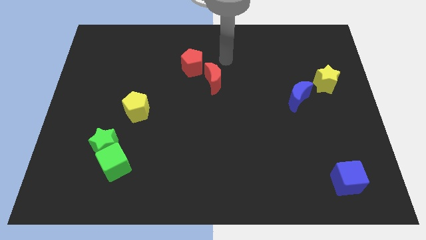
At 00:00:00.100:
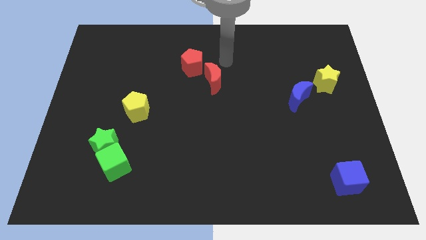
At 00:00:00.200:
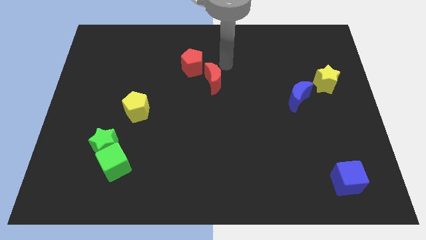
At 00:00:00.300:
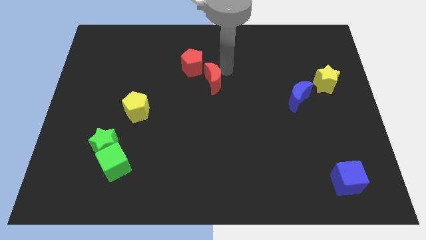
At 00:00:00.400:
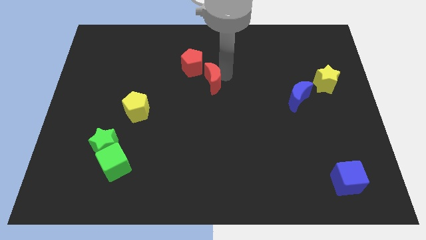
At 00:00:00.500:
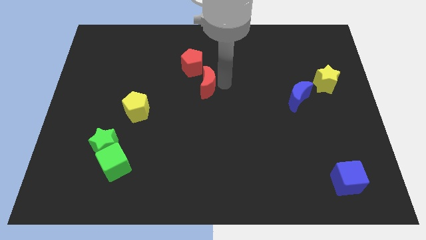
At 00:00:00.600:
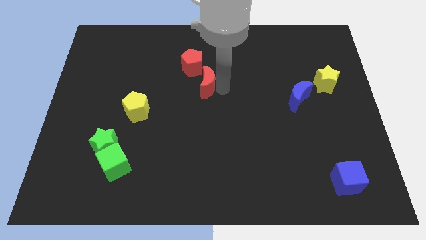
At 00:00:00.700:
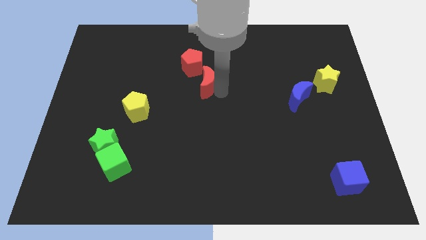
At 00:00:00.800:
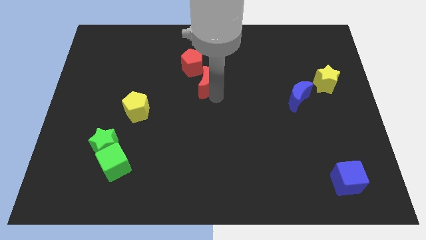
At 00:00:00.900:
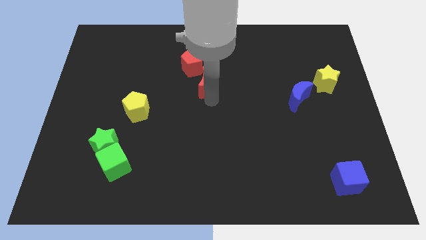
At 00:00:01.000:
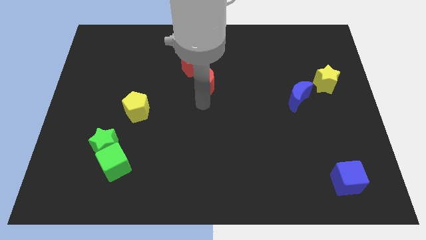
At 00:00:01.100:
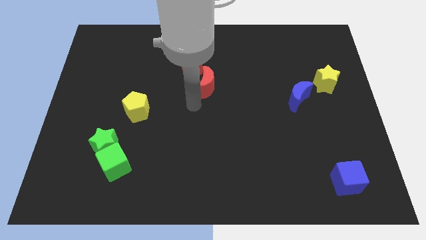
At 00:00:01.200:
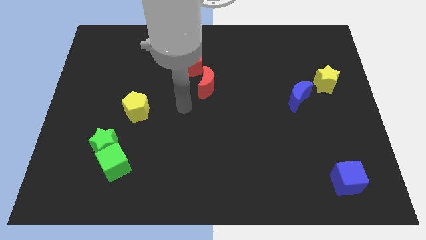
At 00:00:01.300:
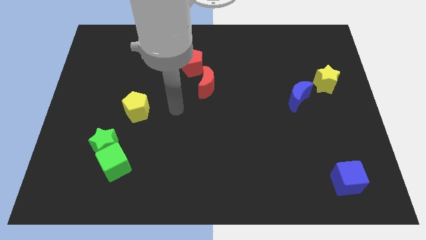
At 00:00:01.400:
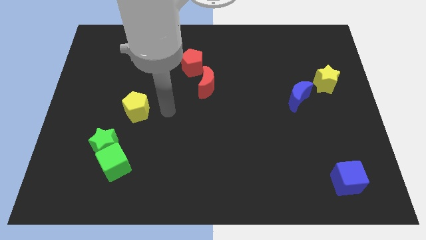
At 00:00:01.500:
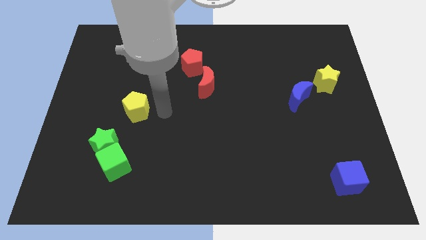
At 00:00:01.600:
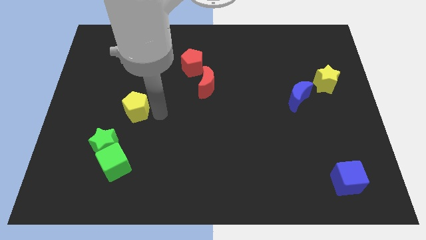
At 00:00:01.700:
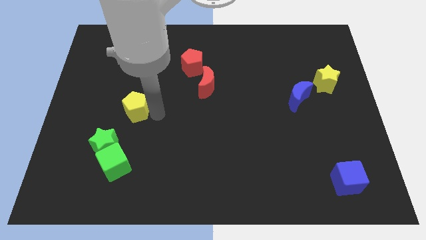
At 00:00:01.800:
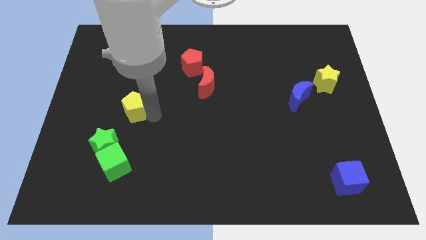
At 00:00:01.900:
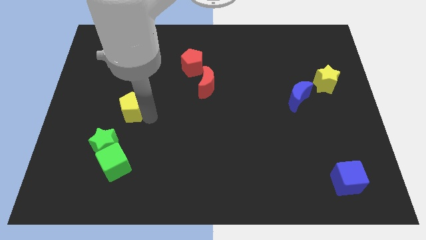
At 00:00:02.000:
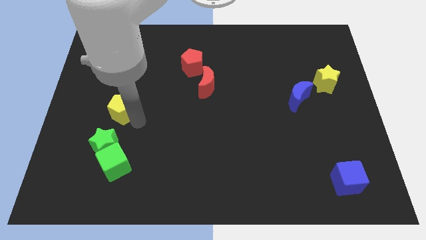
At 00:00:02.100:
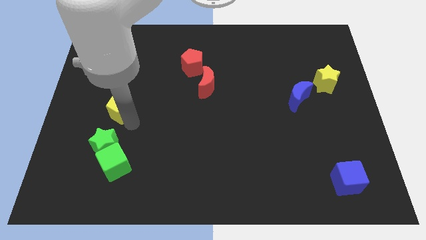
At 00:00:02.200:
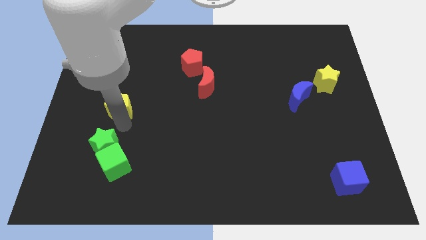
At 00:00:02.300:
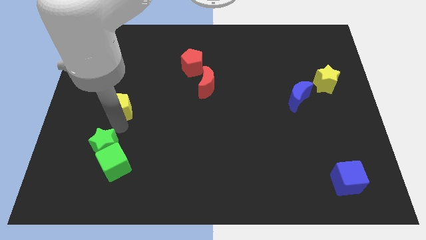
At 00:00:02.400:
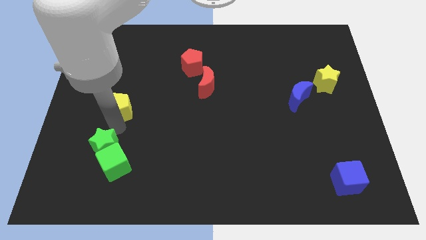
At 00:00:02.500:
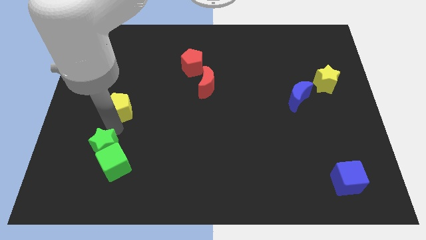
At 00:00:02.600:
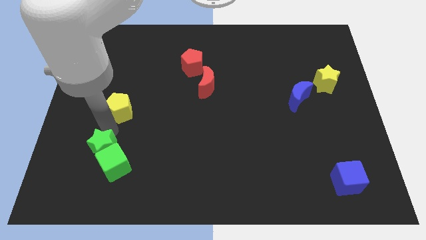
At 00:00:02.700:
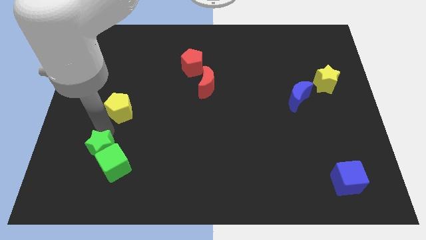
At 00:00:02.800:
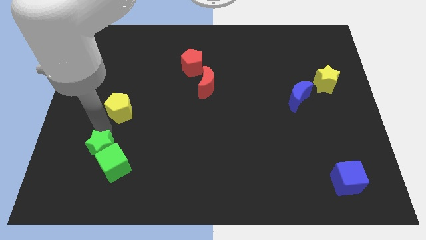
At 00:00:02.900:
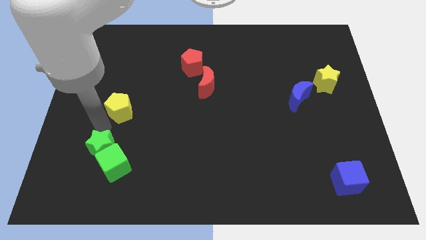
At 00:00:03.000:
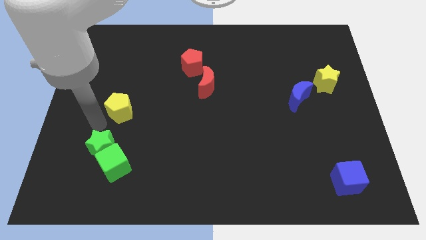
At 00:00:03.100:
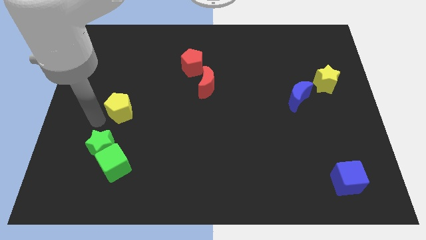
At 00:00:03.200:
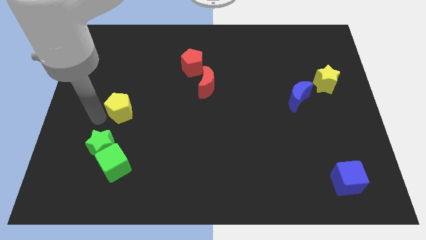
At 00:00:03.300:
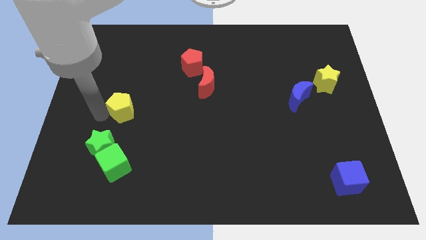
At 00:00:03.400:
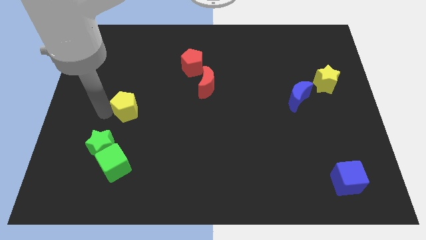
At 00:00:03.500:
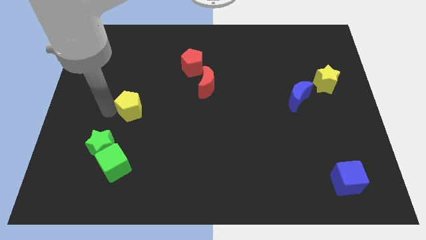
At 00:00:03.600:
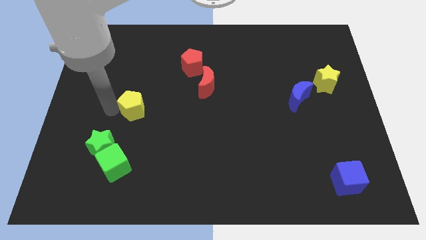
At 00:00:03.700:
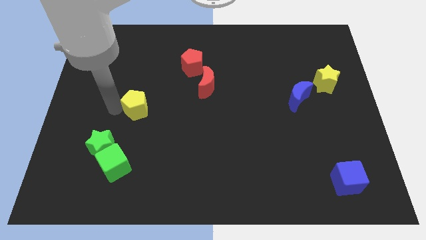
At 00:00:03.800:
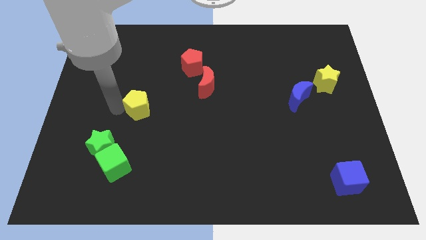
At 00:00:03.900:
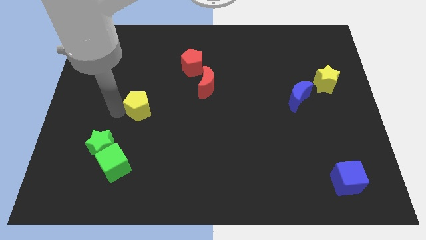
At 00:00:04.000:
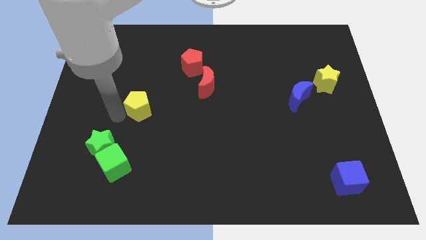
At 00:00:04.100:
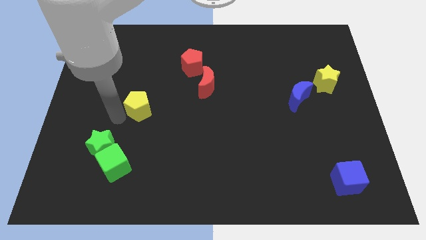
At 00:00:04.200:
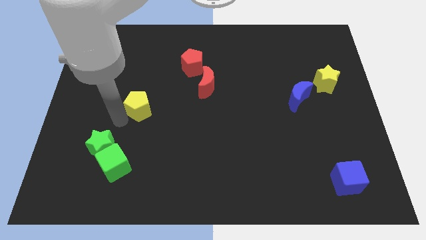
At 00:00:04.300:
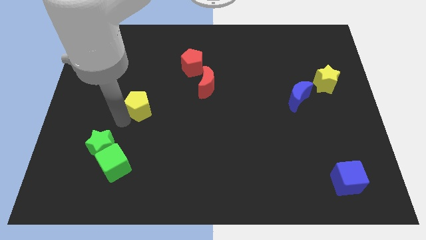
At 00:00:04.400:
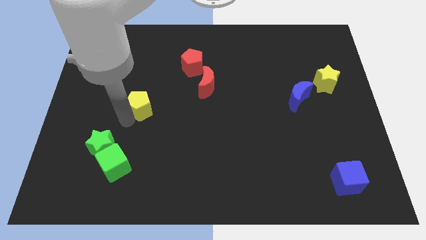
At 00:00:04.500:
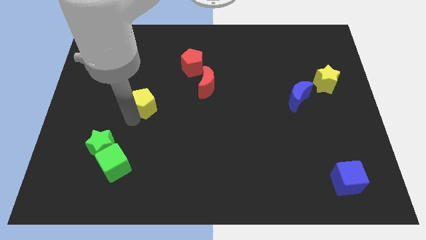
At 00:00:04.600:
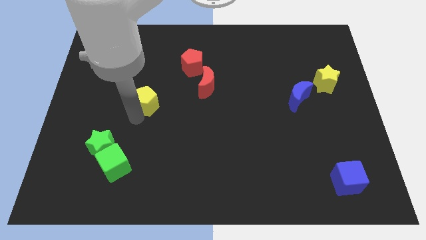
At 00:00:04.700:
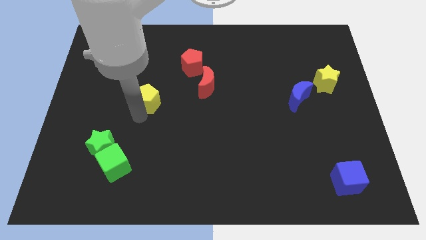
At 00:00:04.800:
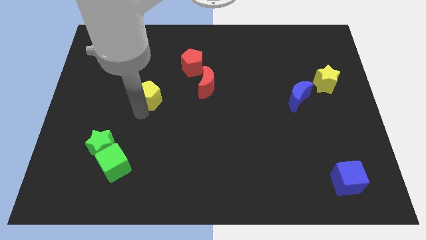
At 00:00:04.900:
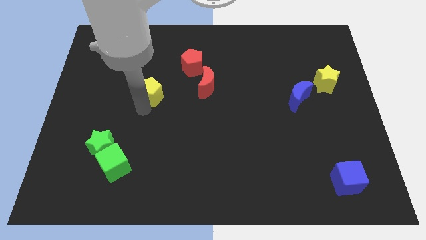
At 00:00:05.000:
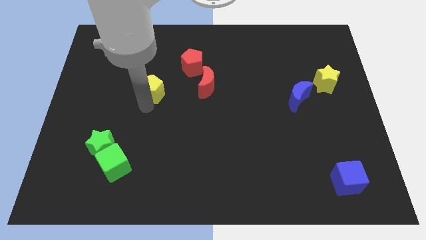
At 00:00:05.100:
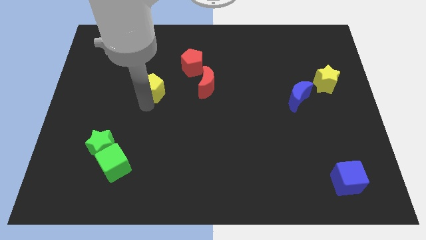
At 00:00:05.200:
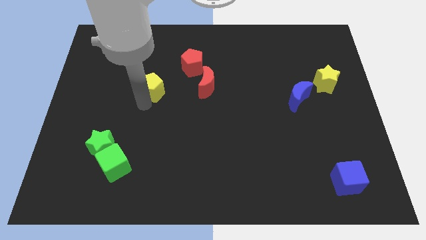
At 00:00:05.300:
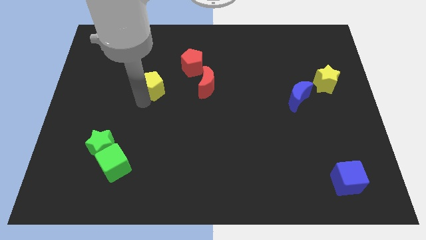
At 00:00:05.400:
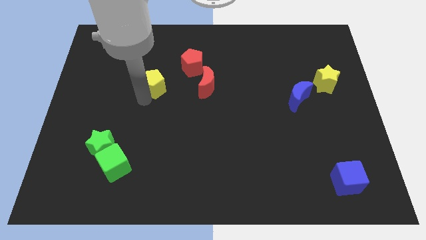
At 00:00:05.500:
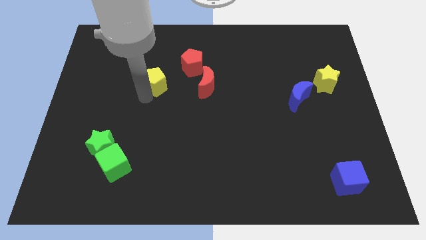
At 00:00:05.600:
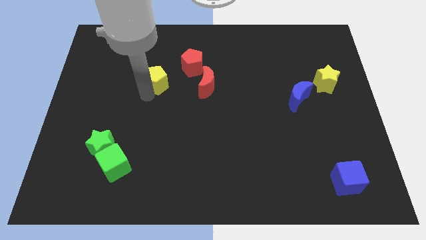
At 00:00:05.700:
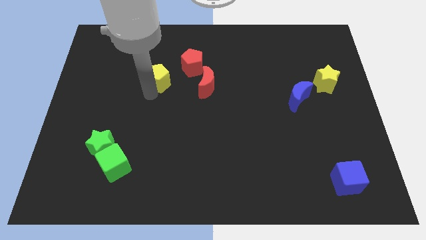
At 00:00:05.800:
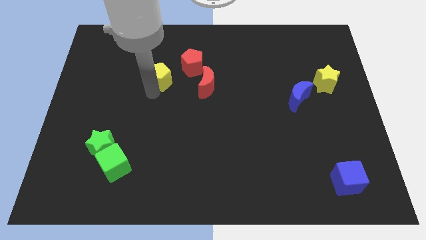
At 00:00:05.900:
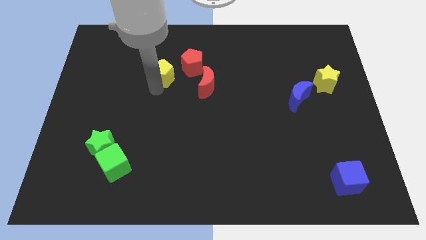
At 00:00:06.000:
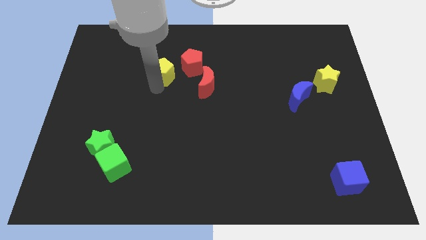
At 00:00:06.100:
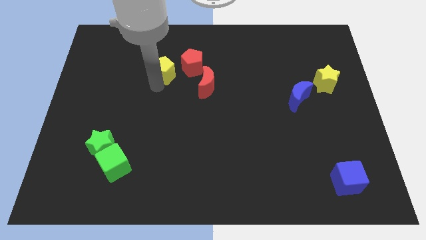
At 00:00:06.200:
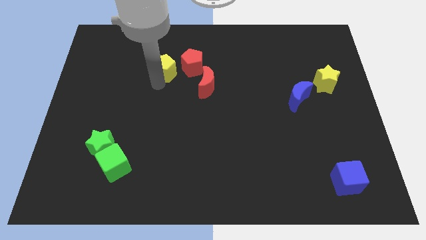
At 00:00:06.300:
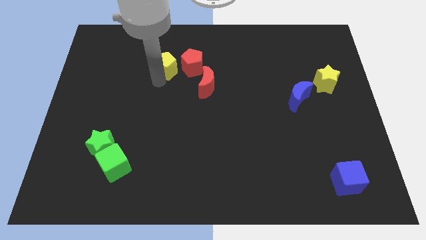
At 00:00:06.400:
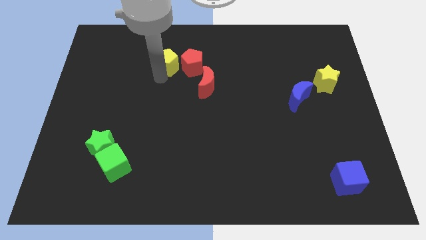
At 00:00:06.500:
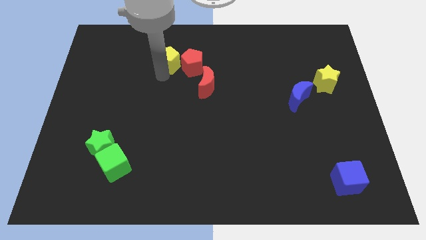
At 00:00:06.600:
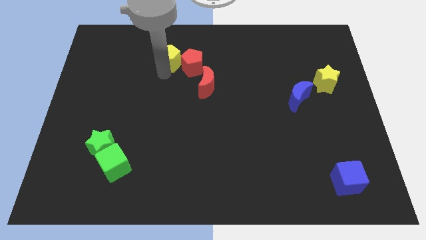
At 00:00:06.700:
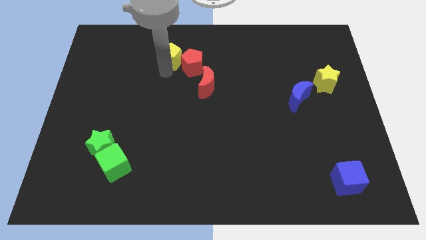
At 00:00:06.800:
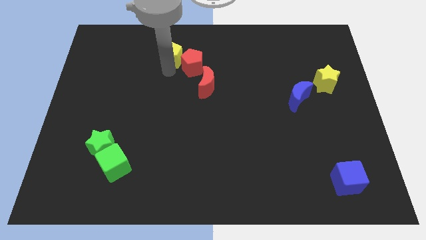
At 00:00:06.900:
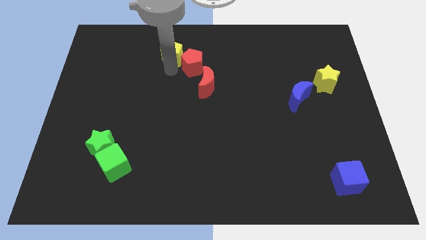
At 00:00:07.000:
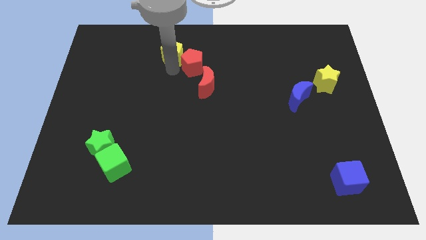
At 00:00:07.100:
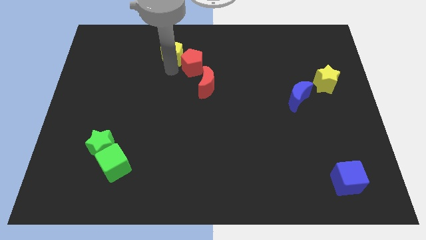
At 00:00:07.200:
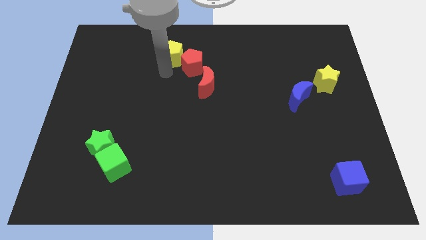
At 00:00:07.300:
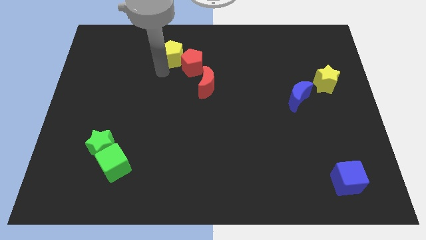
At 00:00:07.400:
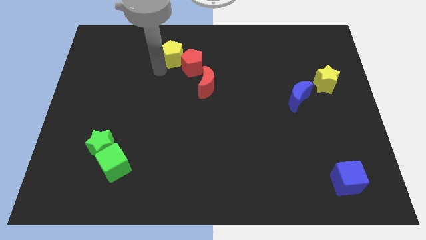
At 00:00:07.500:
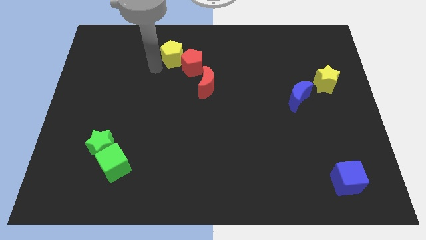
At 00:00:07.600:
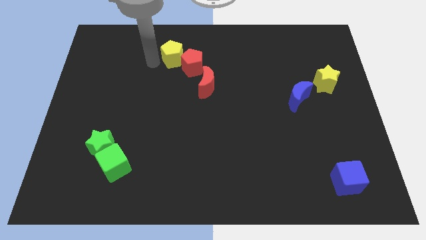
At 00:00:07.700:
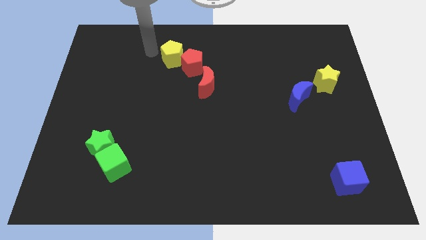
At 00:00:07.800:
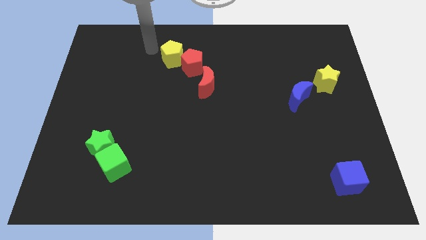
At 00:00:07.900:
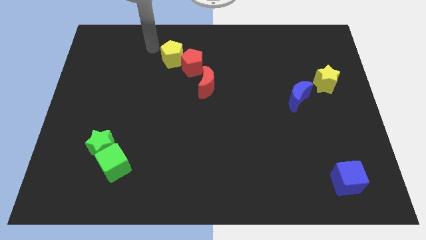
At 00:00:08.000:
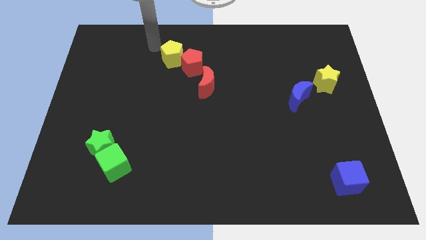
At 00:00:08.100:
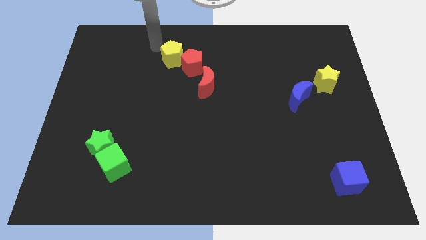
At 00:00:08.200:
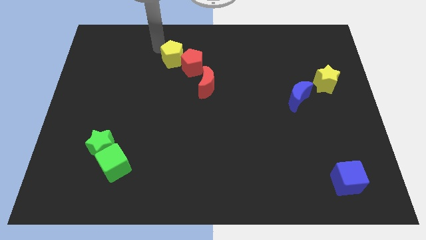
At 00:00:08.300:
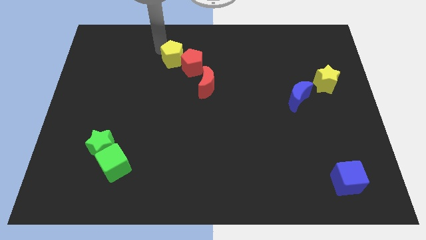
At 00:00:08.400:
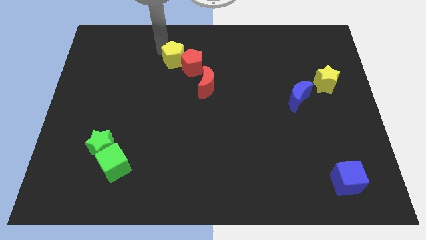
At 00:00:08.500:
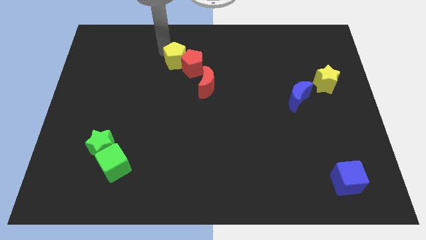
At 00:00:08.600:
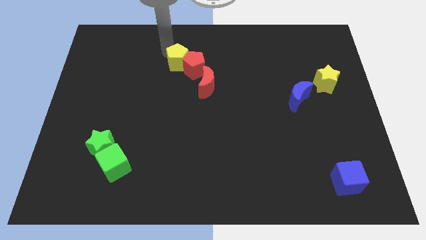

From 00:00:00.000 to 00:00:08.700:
move the yellow pentagon towards the red pentagon
